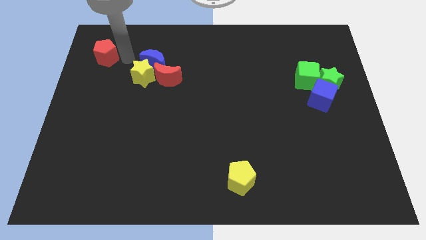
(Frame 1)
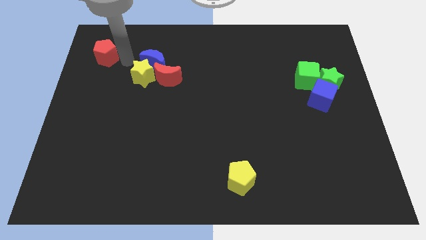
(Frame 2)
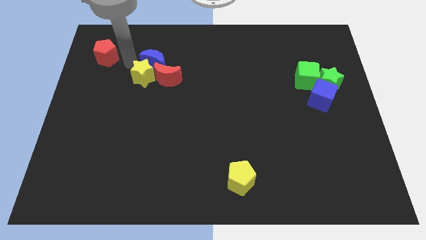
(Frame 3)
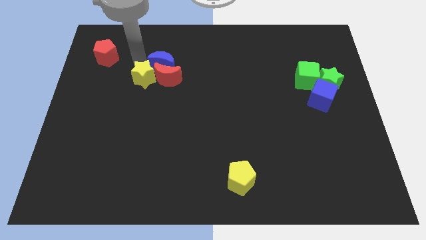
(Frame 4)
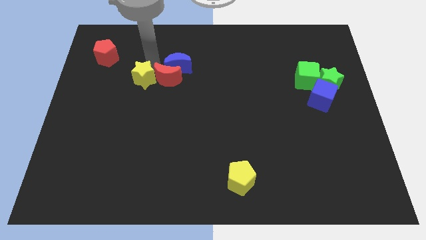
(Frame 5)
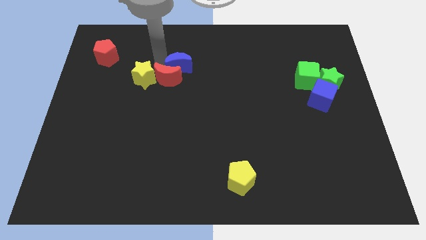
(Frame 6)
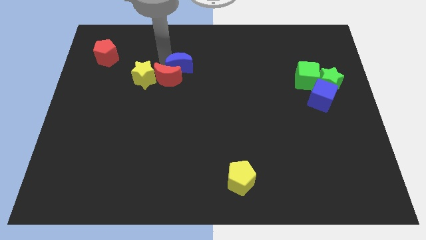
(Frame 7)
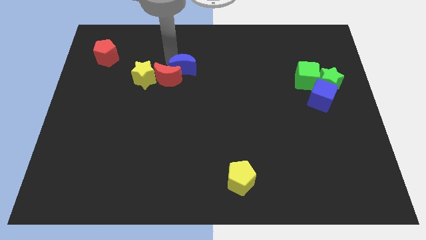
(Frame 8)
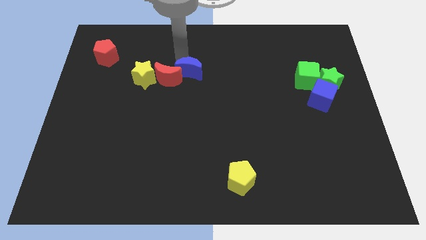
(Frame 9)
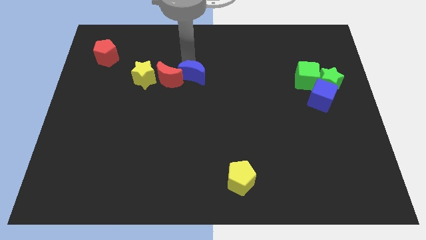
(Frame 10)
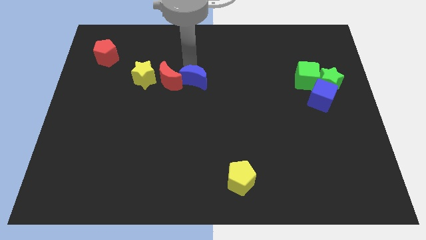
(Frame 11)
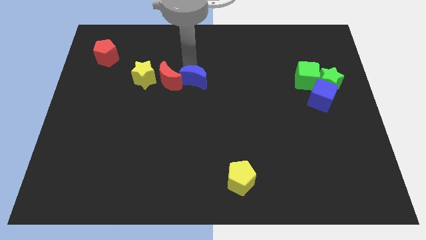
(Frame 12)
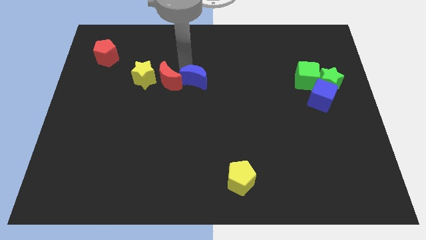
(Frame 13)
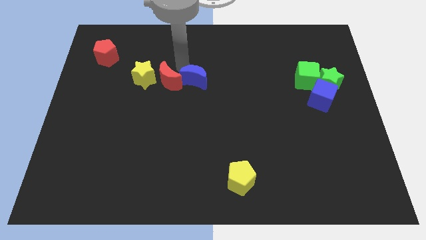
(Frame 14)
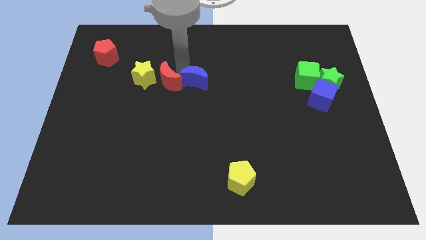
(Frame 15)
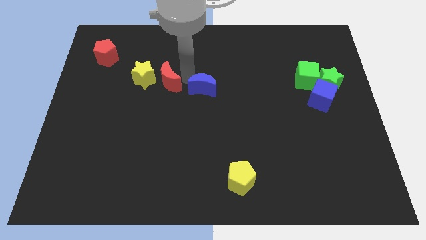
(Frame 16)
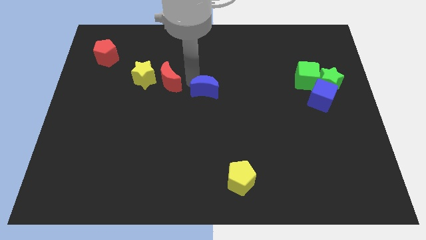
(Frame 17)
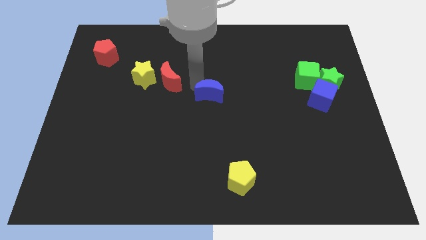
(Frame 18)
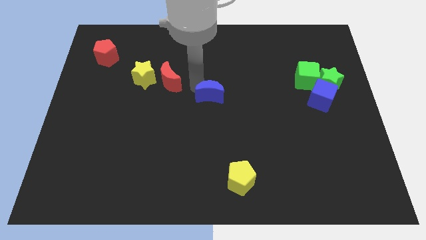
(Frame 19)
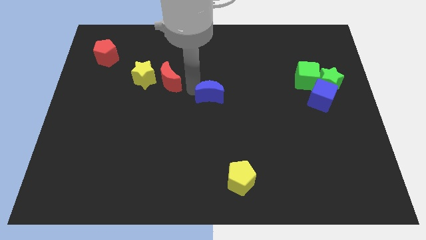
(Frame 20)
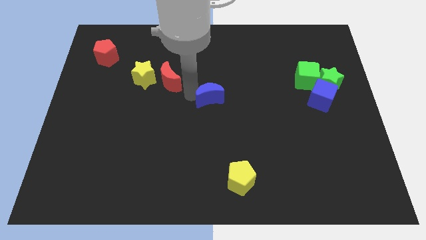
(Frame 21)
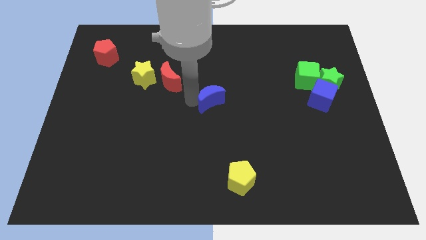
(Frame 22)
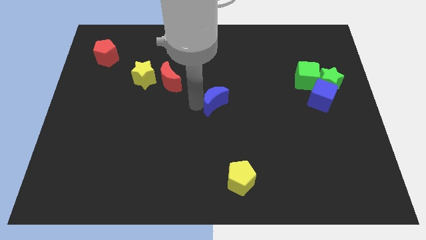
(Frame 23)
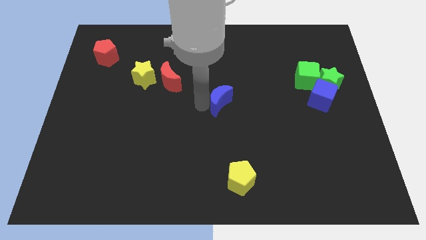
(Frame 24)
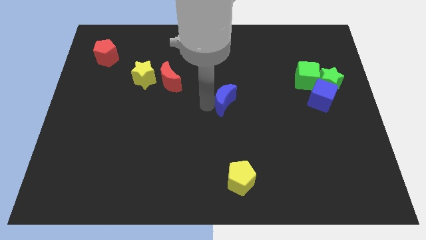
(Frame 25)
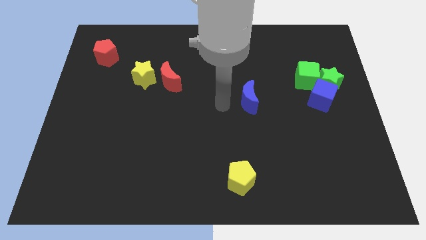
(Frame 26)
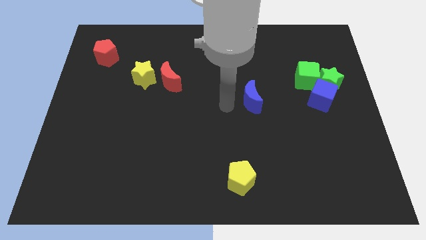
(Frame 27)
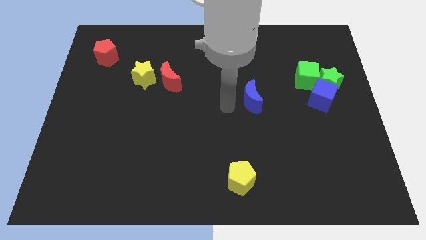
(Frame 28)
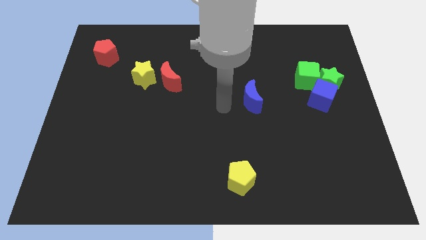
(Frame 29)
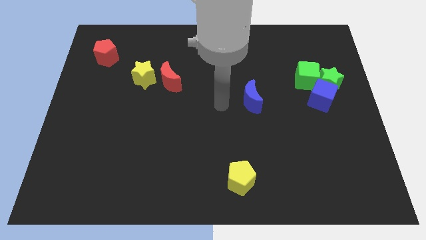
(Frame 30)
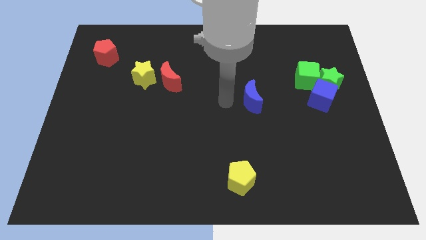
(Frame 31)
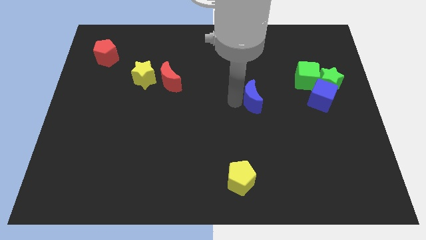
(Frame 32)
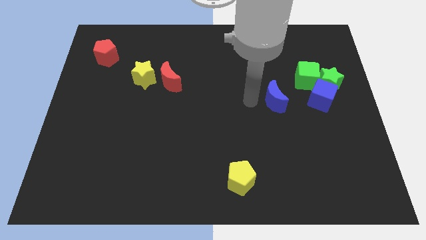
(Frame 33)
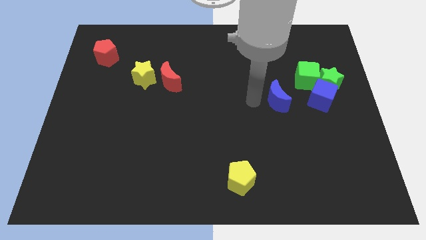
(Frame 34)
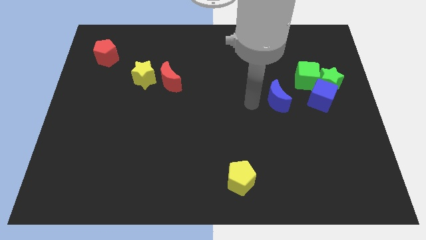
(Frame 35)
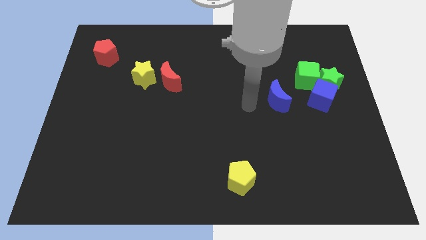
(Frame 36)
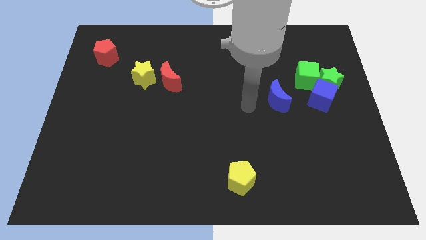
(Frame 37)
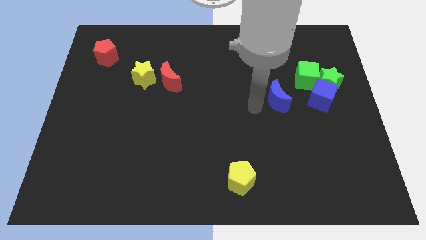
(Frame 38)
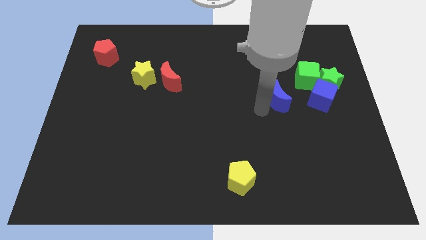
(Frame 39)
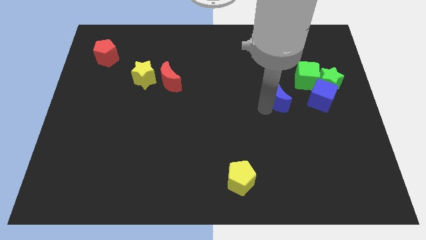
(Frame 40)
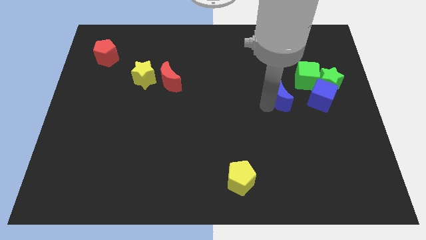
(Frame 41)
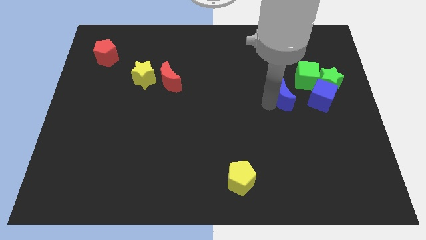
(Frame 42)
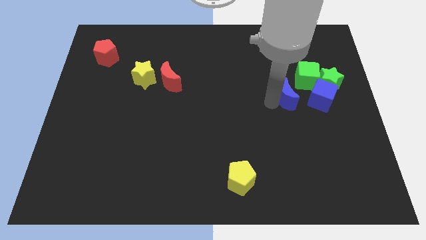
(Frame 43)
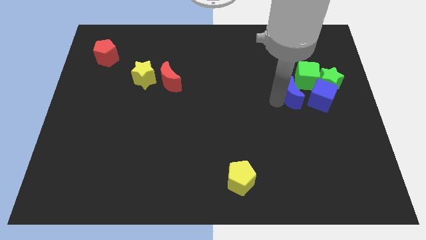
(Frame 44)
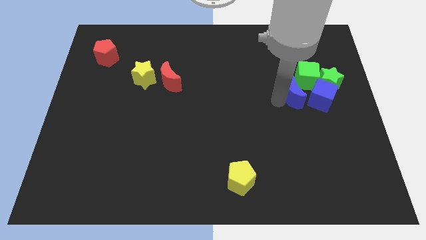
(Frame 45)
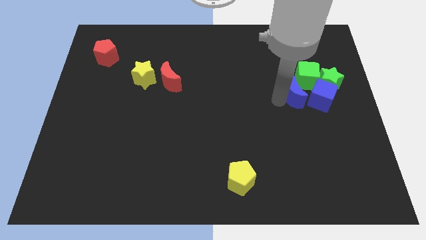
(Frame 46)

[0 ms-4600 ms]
push the blue crescent to the left side of the blue cube

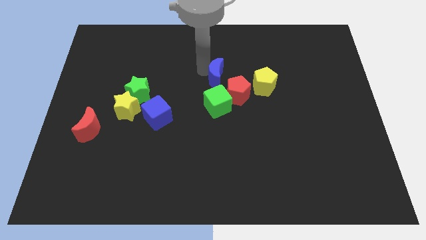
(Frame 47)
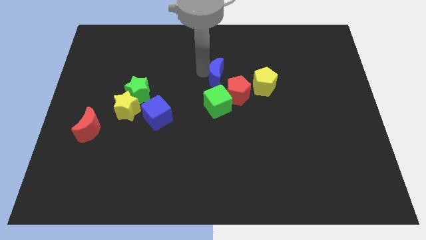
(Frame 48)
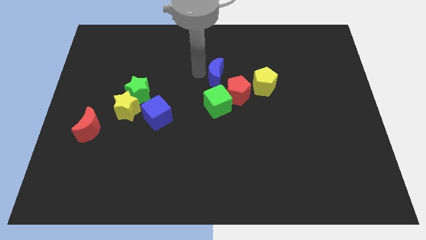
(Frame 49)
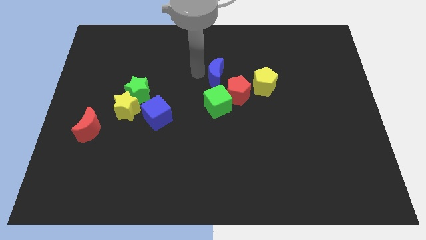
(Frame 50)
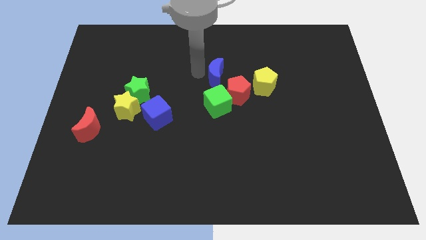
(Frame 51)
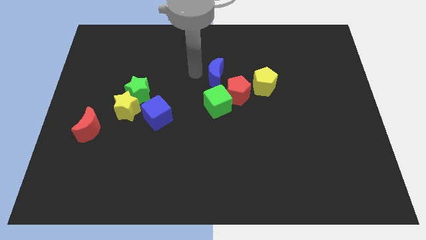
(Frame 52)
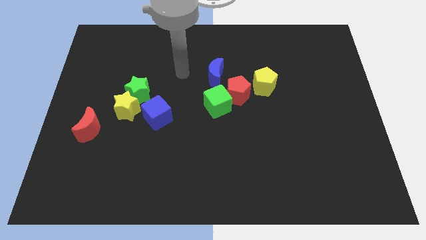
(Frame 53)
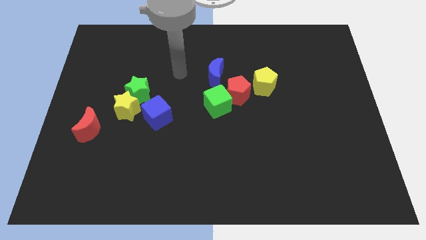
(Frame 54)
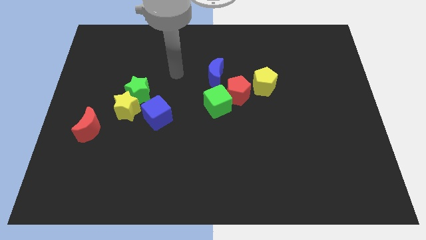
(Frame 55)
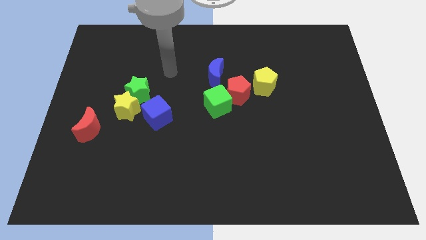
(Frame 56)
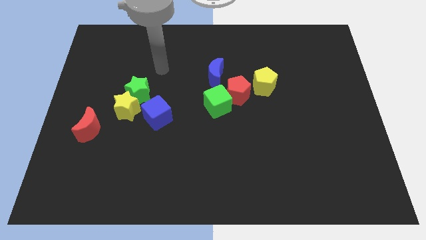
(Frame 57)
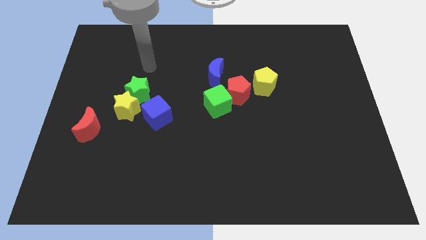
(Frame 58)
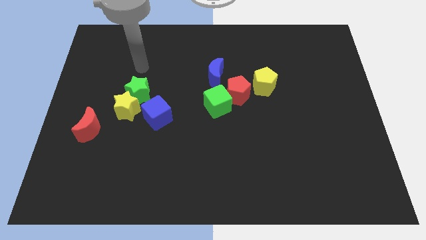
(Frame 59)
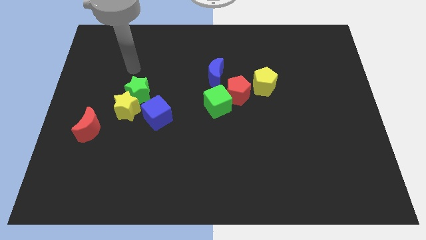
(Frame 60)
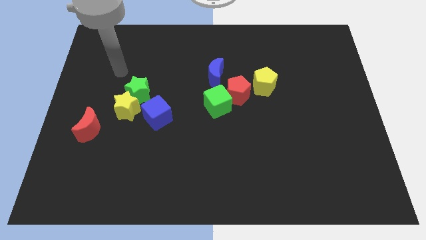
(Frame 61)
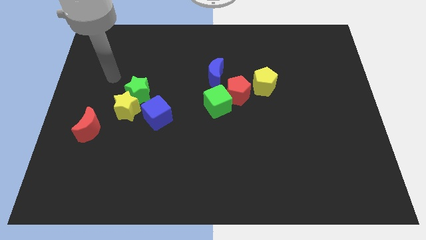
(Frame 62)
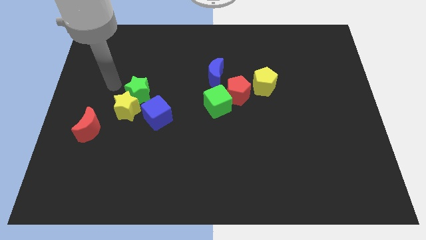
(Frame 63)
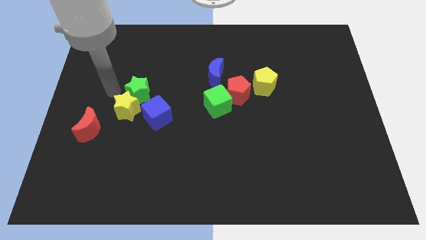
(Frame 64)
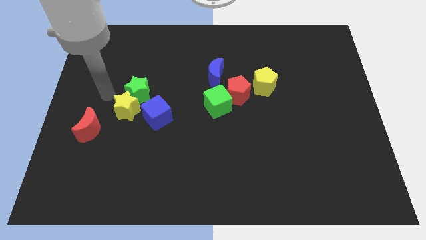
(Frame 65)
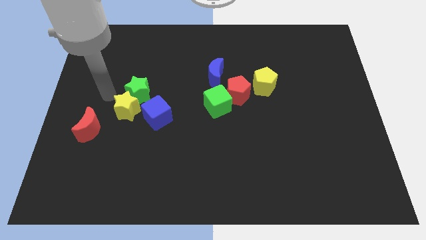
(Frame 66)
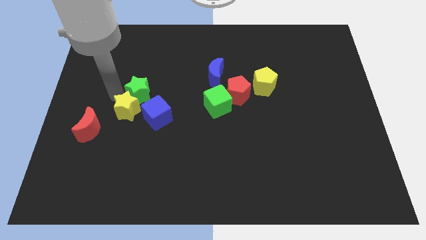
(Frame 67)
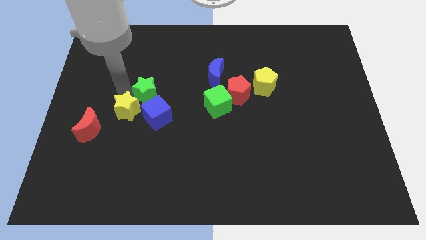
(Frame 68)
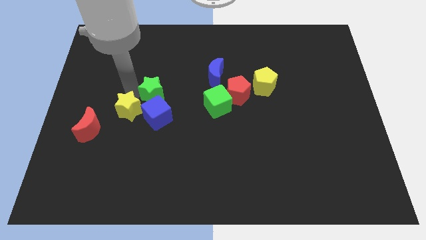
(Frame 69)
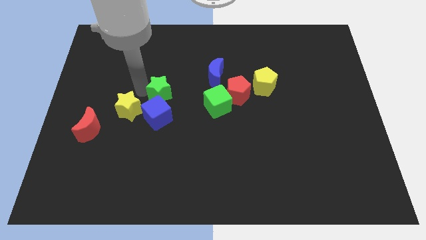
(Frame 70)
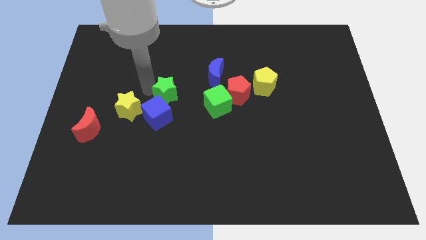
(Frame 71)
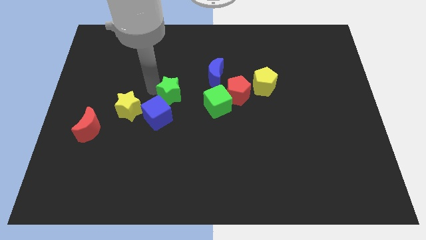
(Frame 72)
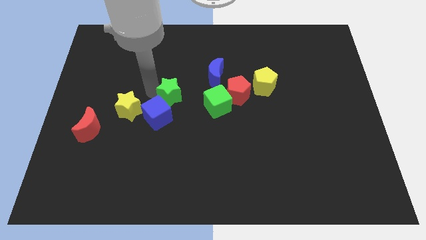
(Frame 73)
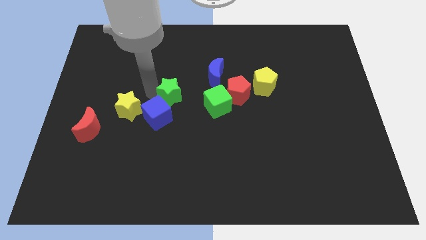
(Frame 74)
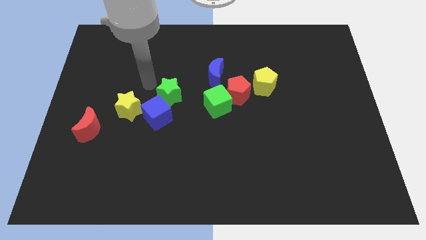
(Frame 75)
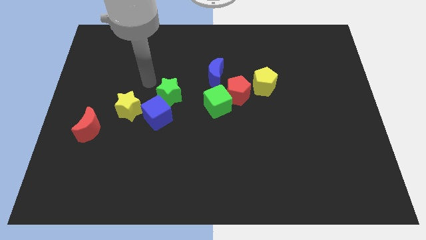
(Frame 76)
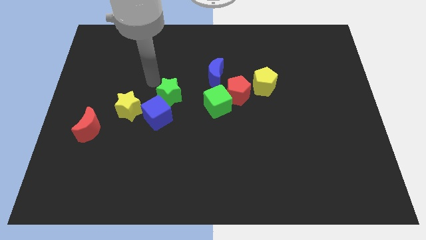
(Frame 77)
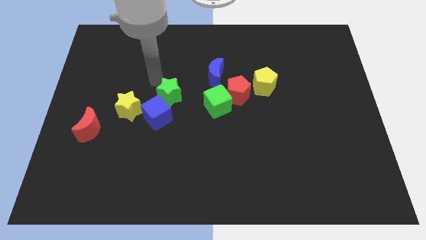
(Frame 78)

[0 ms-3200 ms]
place the green star at the top right side of blue cube

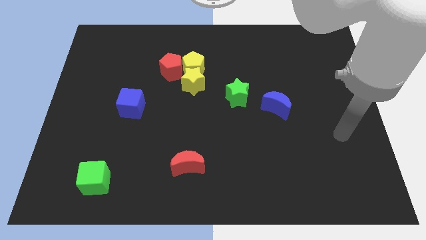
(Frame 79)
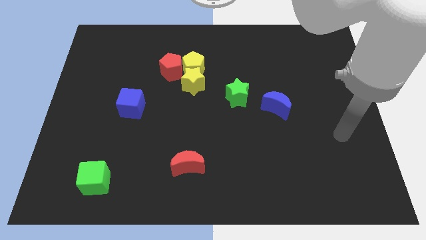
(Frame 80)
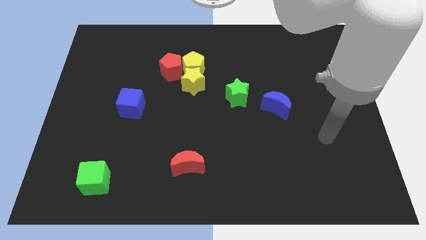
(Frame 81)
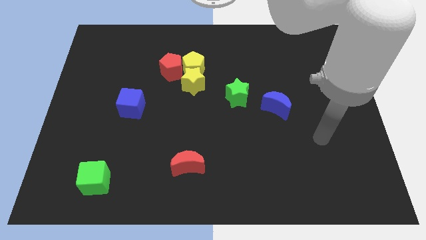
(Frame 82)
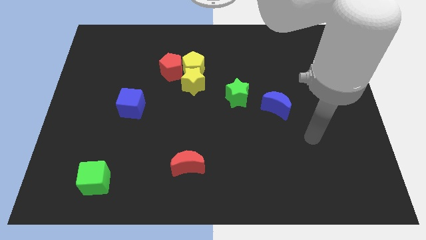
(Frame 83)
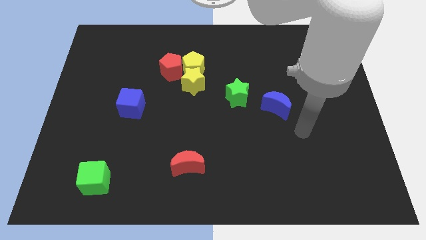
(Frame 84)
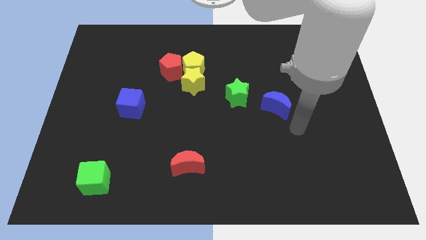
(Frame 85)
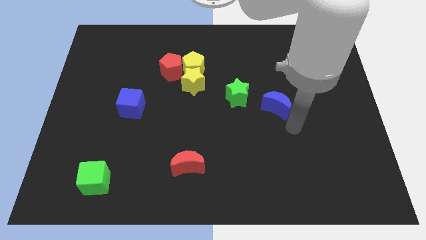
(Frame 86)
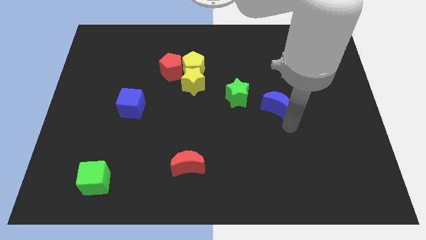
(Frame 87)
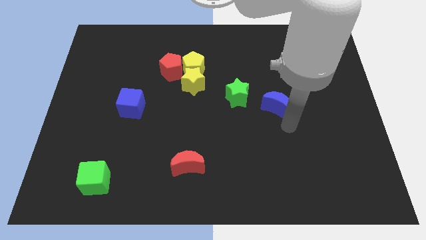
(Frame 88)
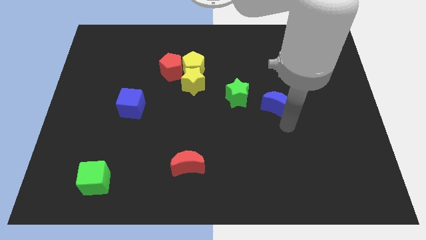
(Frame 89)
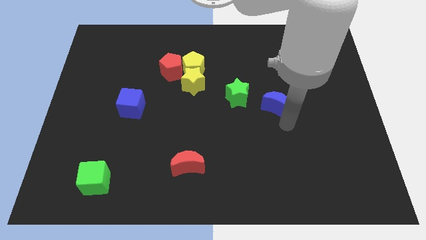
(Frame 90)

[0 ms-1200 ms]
move the arm towards the blue crescent
